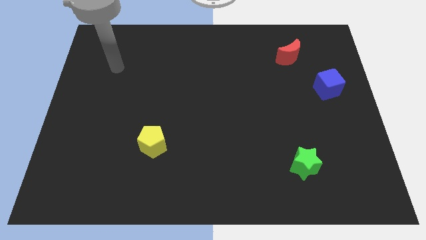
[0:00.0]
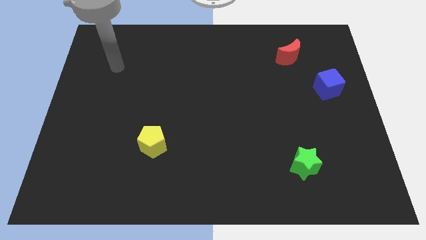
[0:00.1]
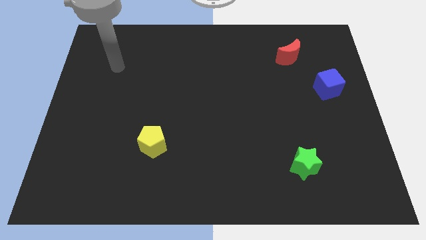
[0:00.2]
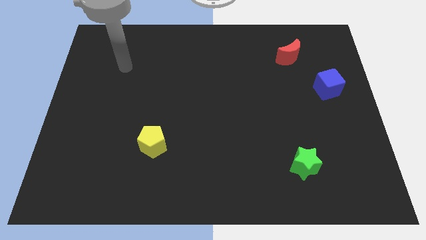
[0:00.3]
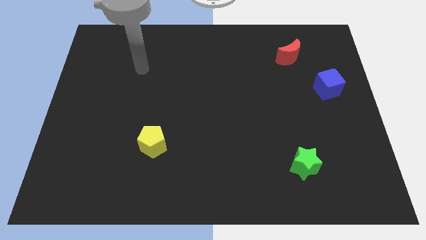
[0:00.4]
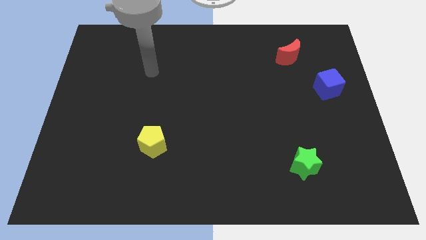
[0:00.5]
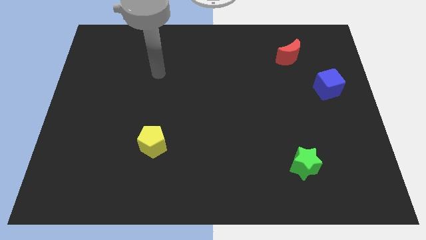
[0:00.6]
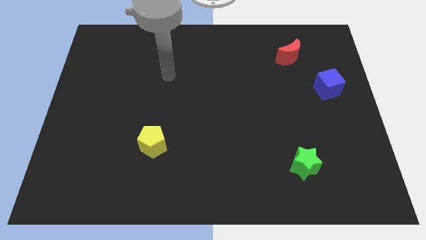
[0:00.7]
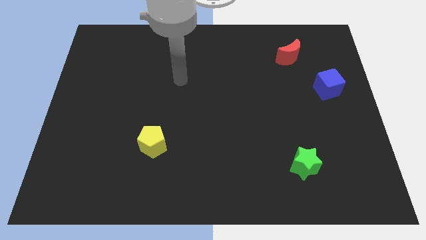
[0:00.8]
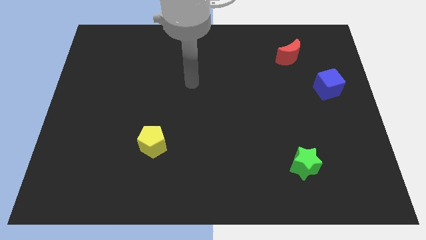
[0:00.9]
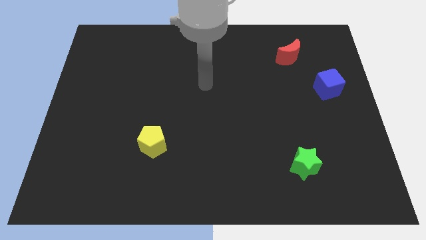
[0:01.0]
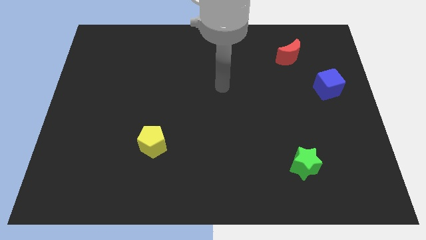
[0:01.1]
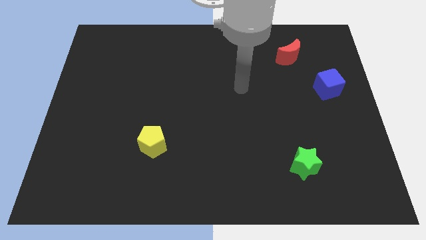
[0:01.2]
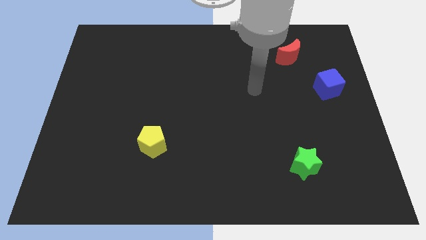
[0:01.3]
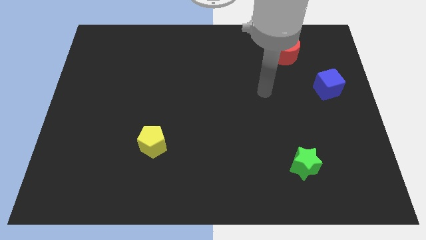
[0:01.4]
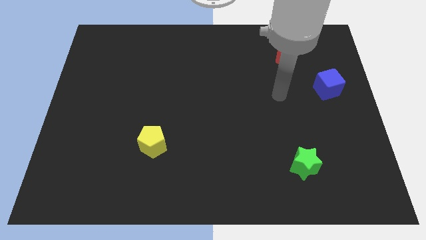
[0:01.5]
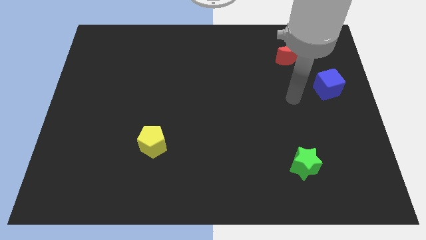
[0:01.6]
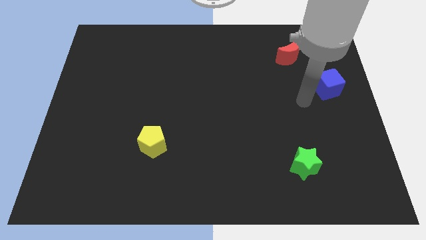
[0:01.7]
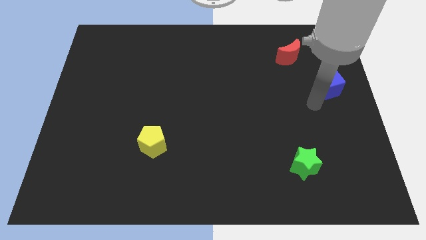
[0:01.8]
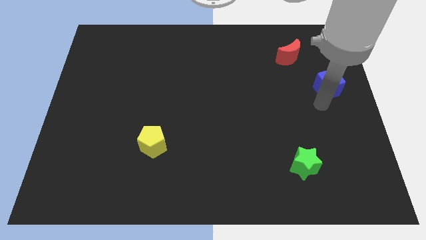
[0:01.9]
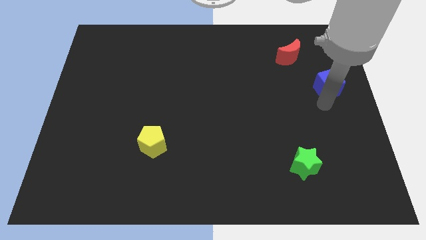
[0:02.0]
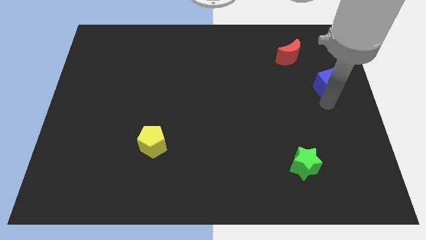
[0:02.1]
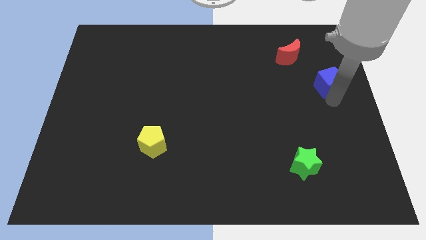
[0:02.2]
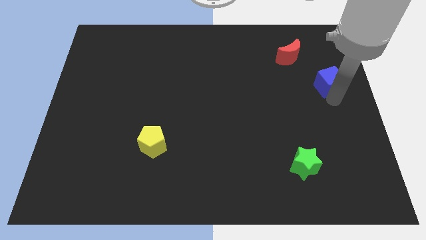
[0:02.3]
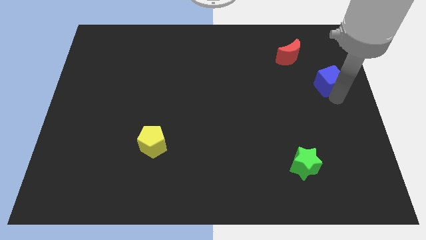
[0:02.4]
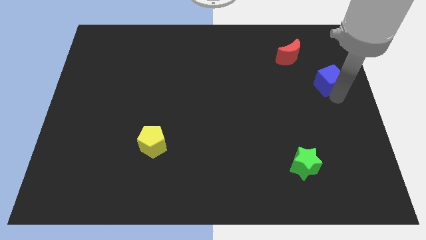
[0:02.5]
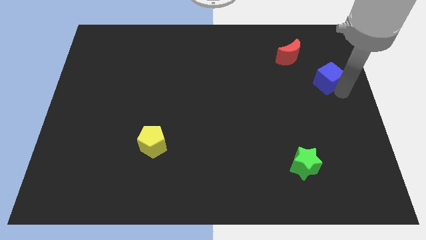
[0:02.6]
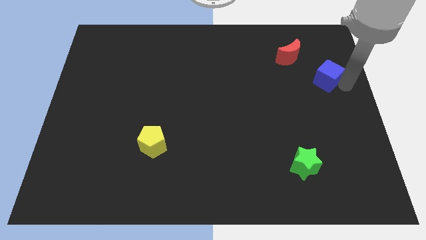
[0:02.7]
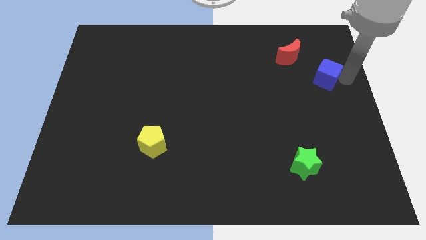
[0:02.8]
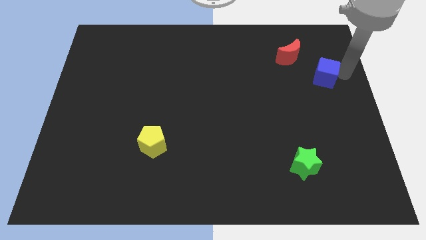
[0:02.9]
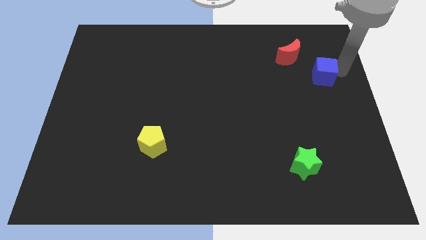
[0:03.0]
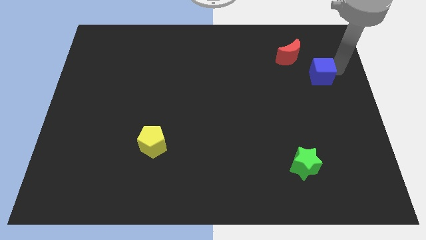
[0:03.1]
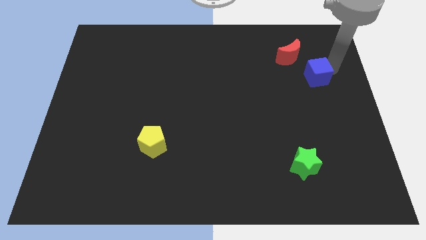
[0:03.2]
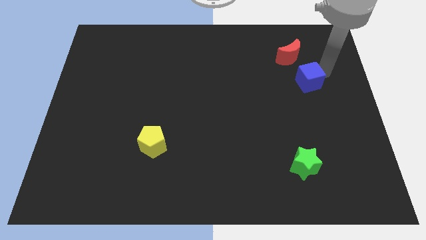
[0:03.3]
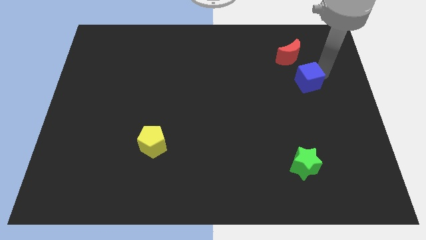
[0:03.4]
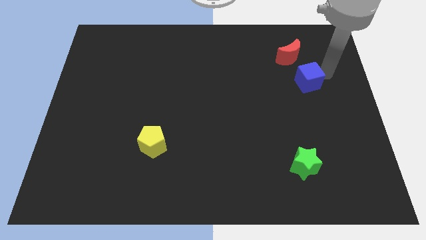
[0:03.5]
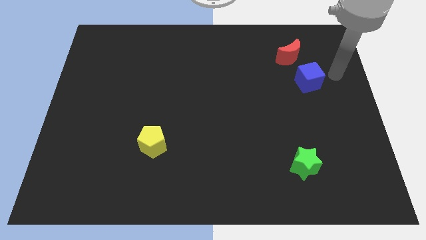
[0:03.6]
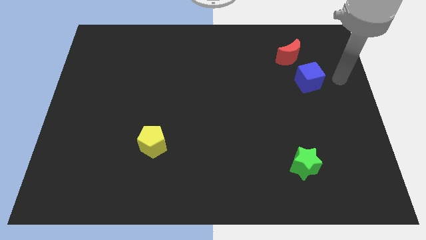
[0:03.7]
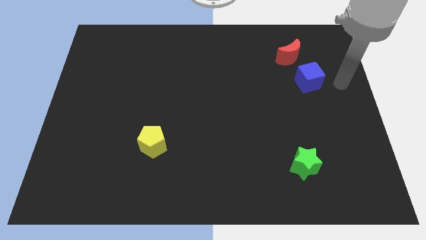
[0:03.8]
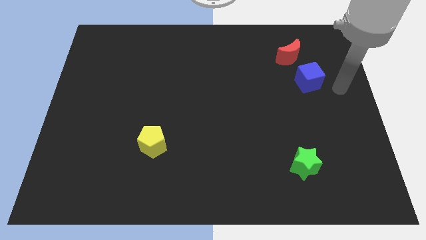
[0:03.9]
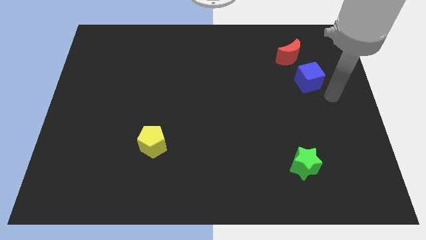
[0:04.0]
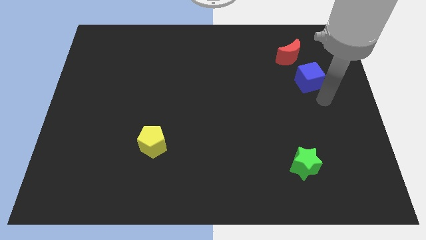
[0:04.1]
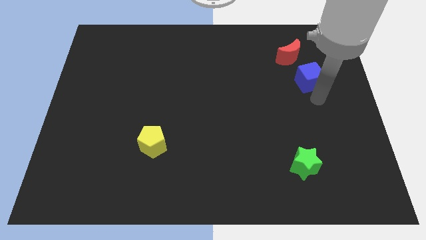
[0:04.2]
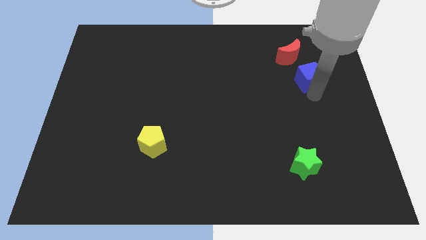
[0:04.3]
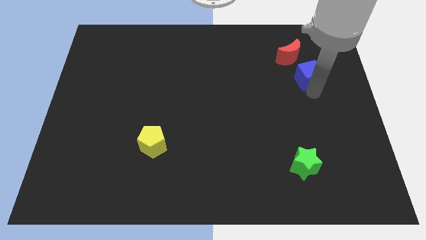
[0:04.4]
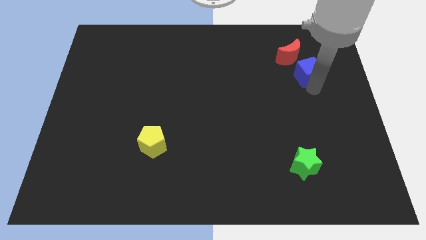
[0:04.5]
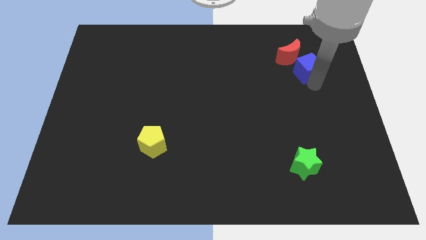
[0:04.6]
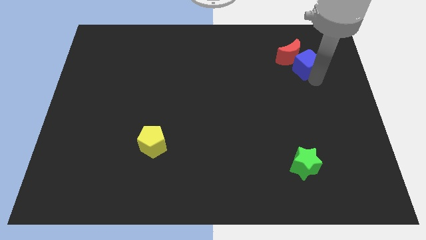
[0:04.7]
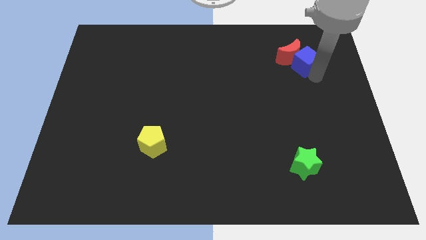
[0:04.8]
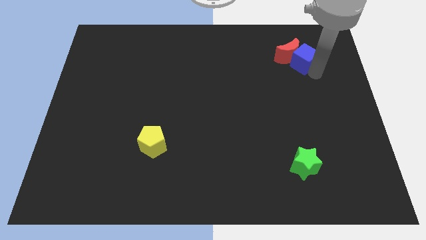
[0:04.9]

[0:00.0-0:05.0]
slide the blue block towards the red block

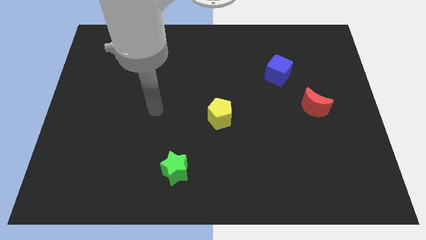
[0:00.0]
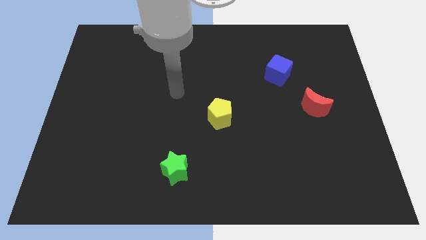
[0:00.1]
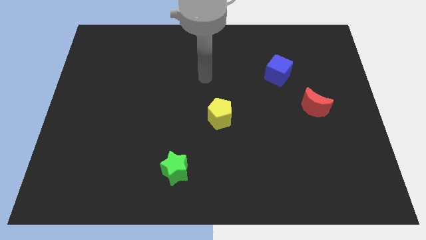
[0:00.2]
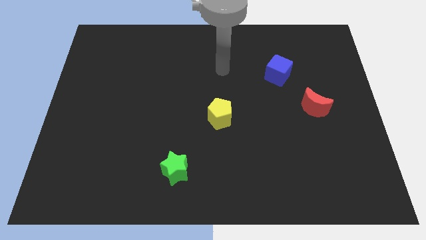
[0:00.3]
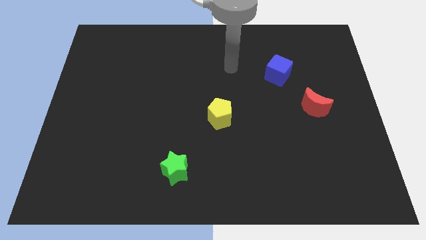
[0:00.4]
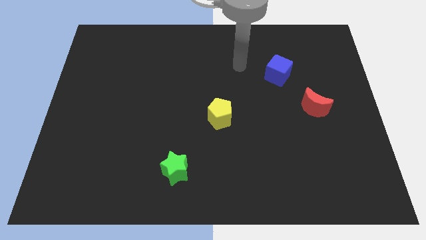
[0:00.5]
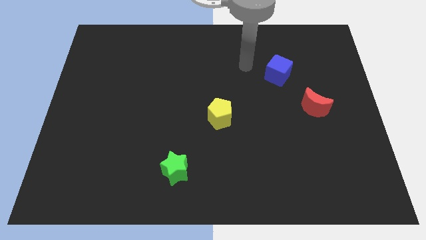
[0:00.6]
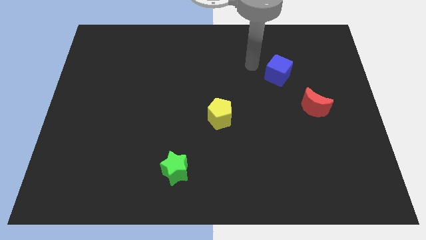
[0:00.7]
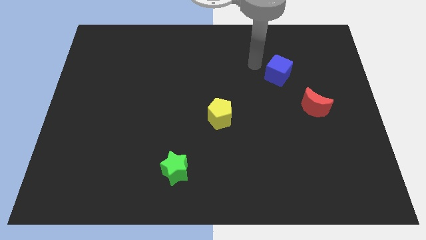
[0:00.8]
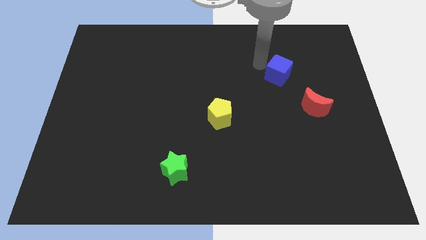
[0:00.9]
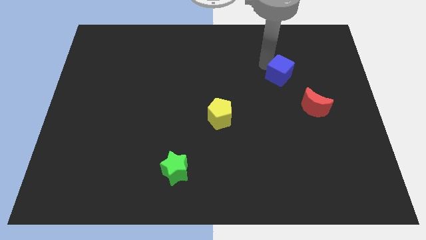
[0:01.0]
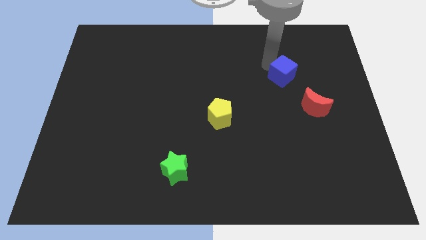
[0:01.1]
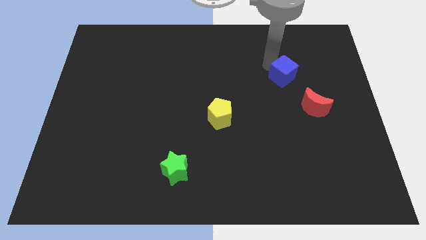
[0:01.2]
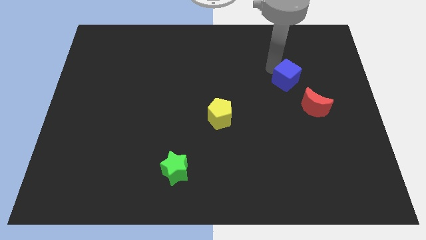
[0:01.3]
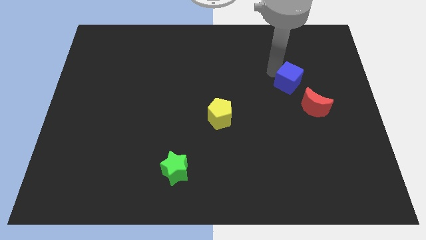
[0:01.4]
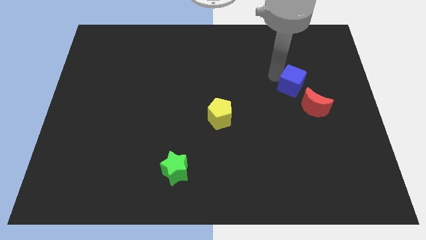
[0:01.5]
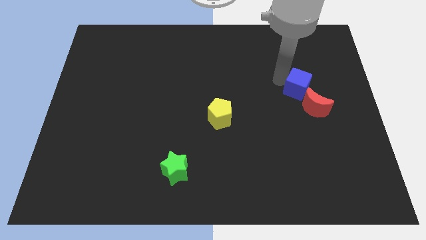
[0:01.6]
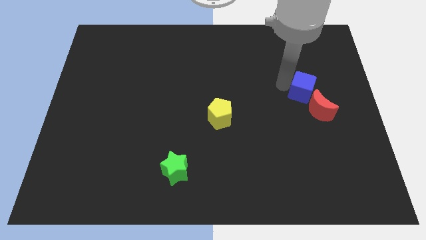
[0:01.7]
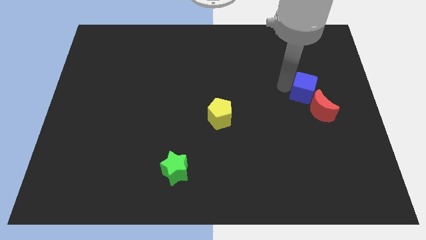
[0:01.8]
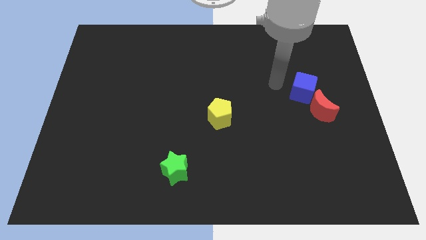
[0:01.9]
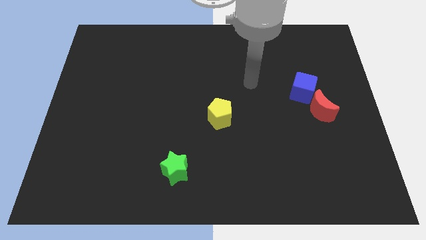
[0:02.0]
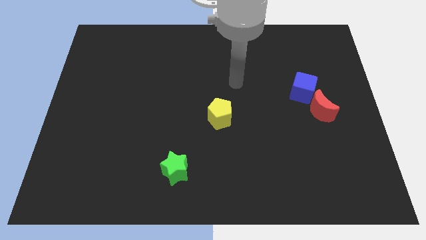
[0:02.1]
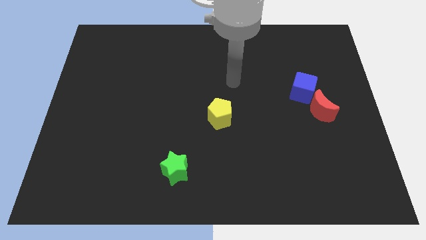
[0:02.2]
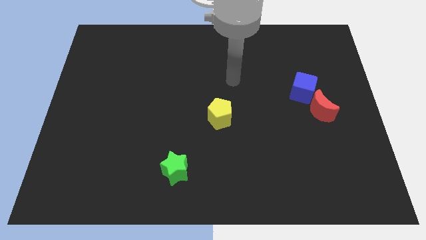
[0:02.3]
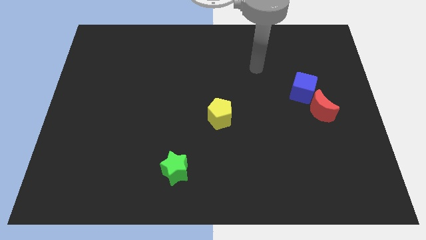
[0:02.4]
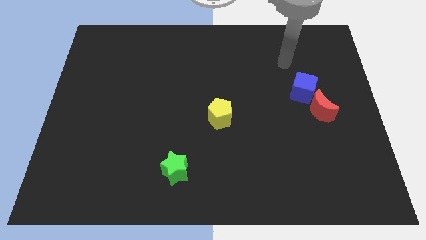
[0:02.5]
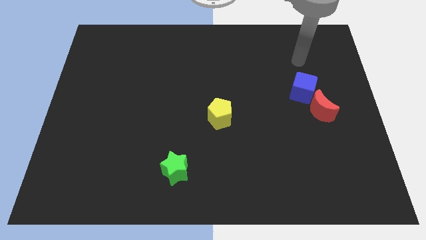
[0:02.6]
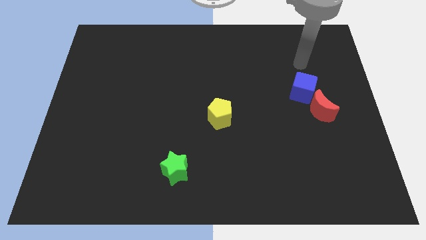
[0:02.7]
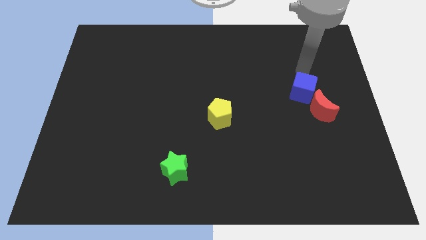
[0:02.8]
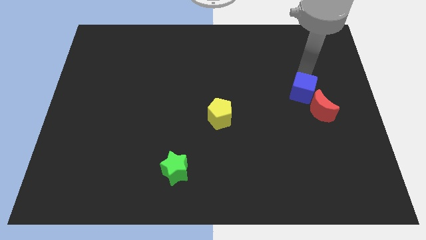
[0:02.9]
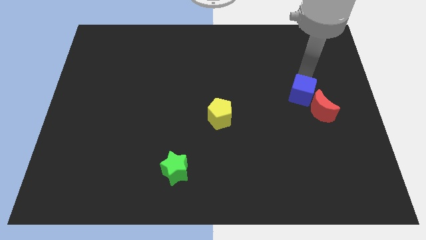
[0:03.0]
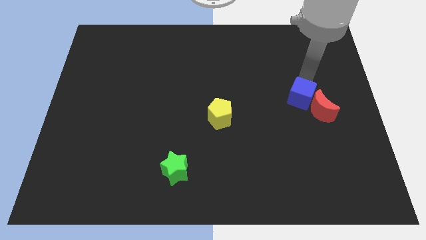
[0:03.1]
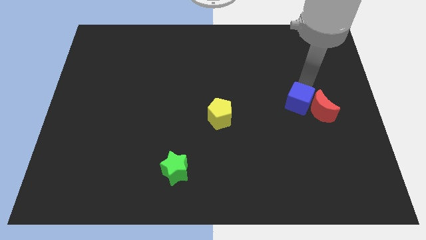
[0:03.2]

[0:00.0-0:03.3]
move the cube towards the moon

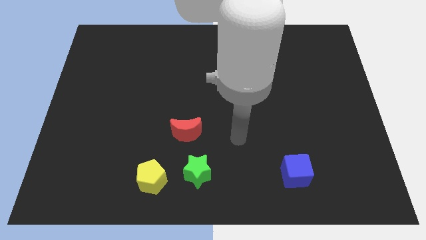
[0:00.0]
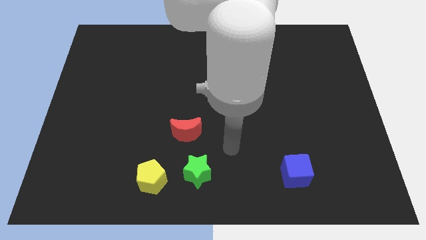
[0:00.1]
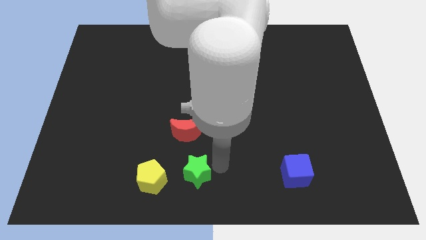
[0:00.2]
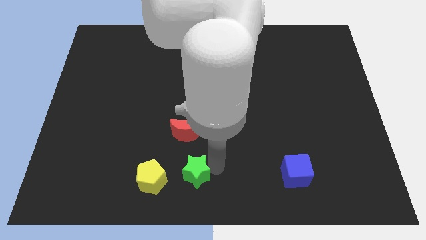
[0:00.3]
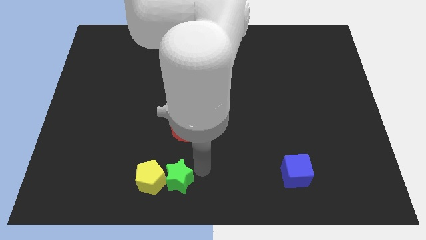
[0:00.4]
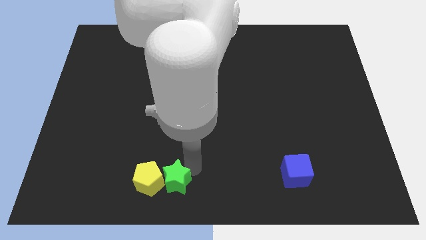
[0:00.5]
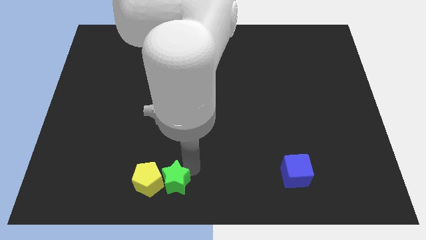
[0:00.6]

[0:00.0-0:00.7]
slide the green block to the pentagon
